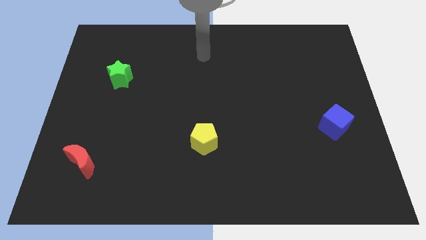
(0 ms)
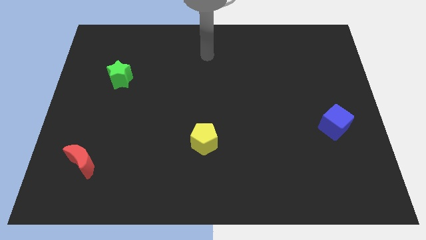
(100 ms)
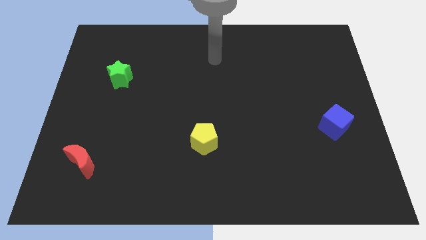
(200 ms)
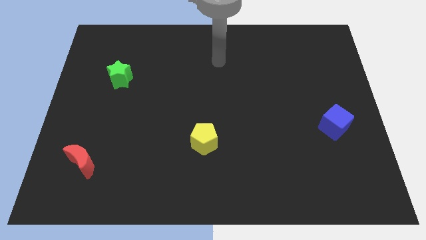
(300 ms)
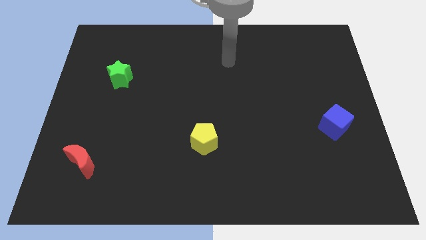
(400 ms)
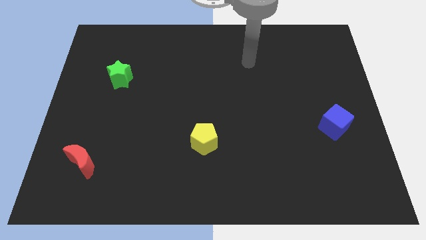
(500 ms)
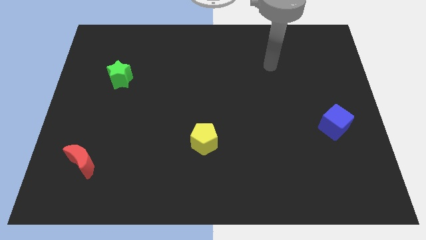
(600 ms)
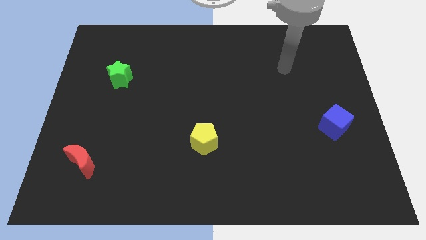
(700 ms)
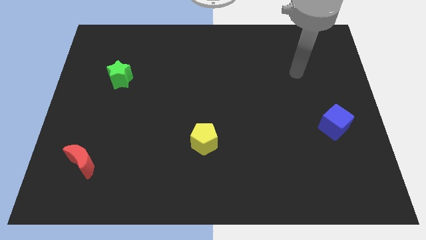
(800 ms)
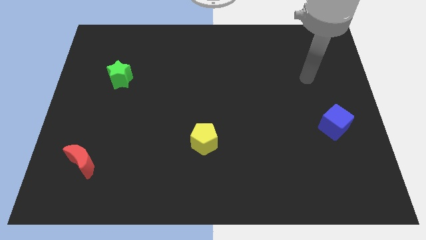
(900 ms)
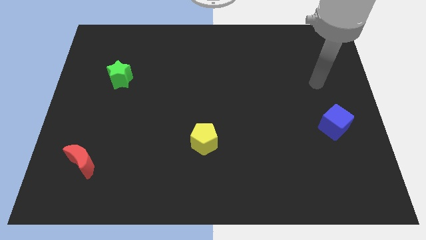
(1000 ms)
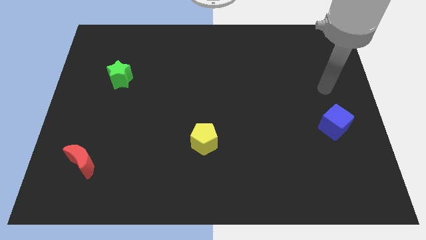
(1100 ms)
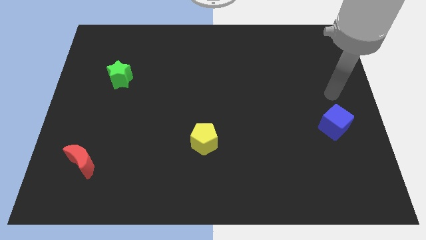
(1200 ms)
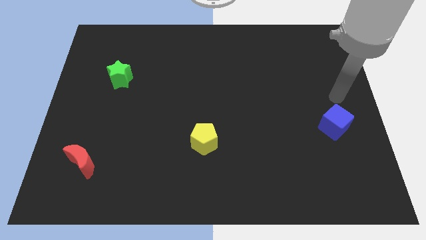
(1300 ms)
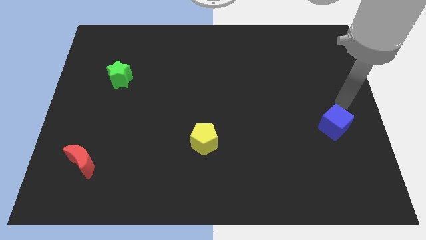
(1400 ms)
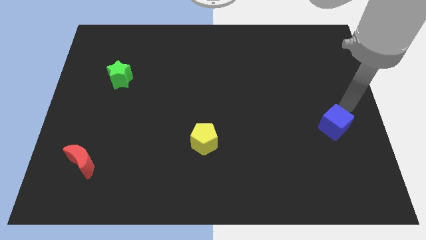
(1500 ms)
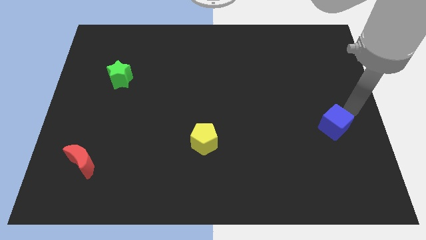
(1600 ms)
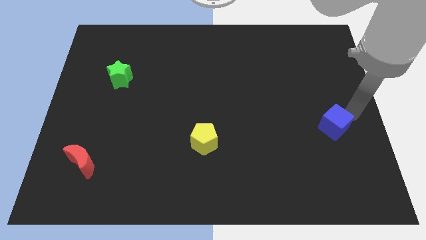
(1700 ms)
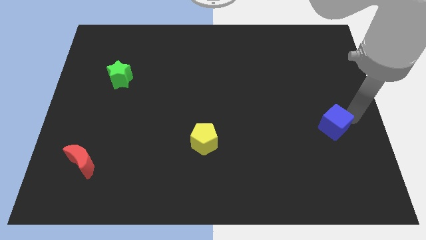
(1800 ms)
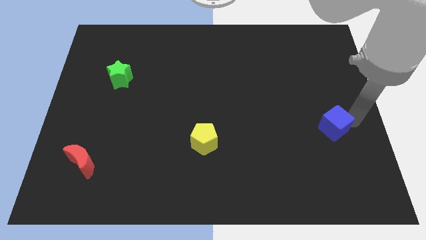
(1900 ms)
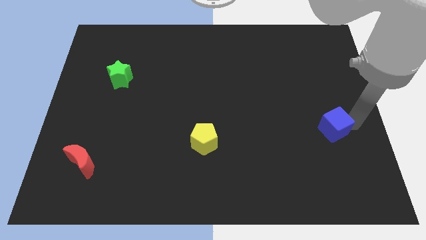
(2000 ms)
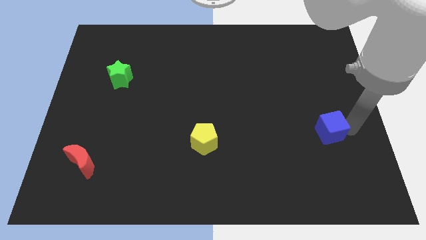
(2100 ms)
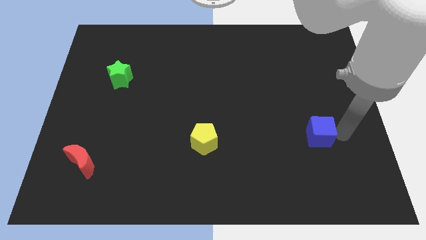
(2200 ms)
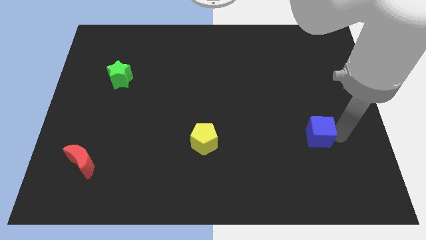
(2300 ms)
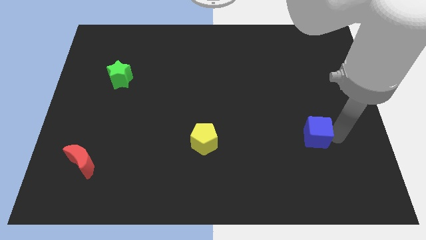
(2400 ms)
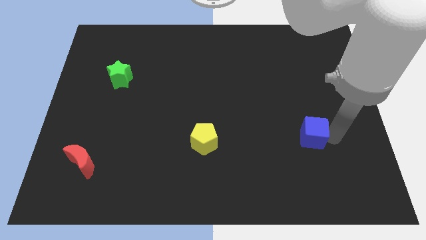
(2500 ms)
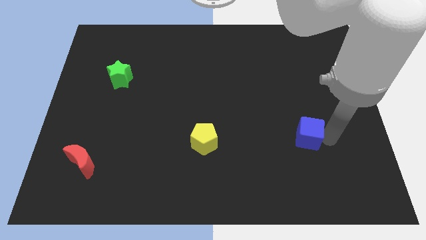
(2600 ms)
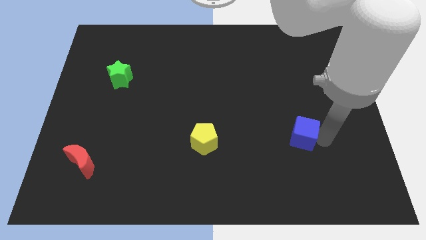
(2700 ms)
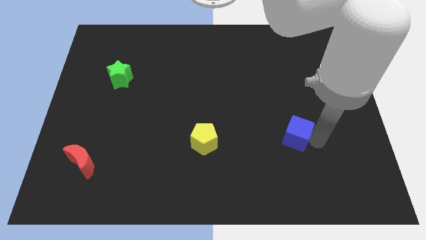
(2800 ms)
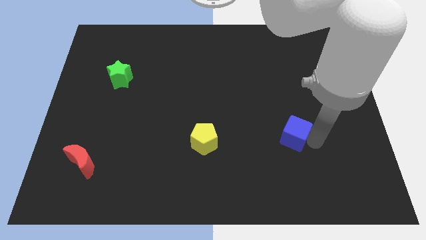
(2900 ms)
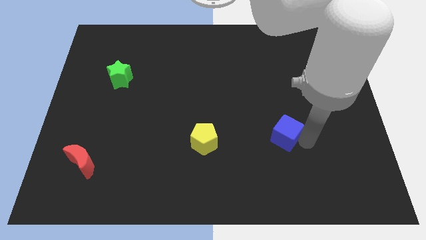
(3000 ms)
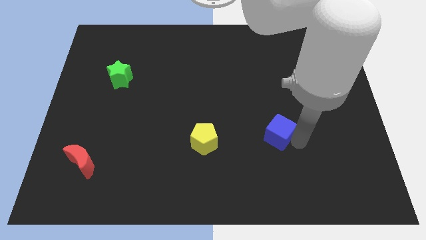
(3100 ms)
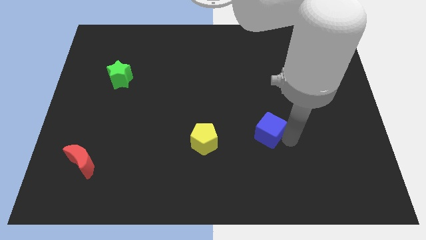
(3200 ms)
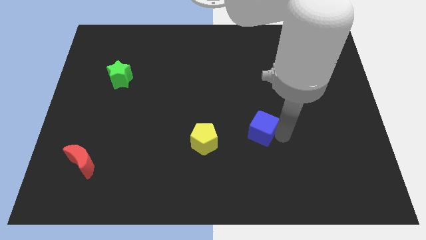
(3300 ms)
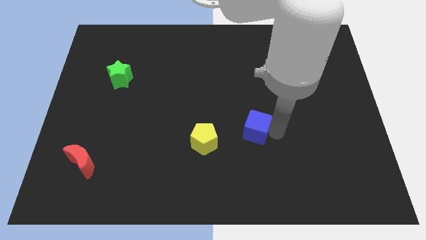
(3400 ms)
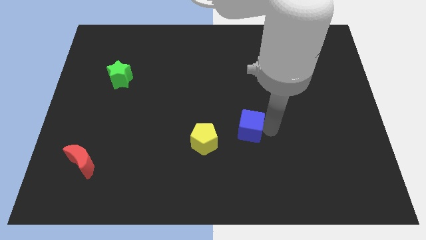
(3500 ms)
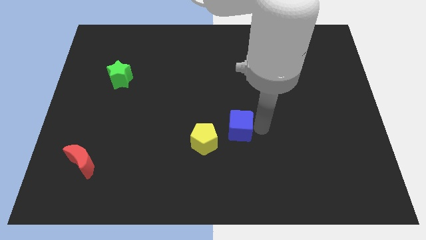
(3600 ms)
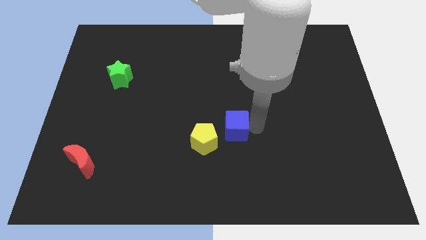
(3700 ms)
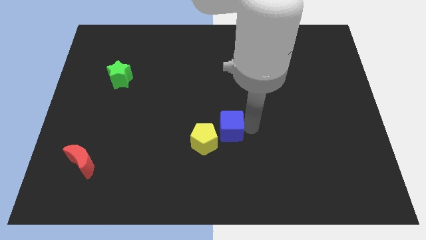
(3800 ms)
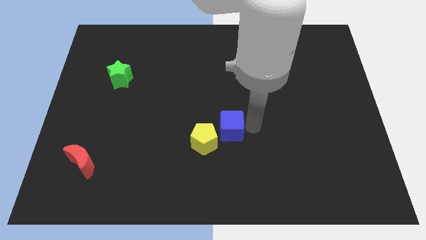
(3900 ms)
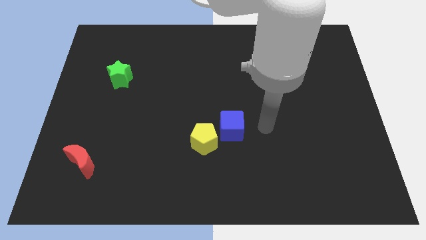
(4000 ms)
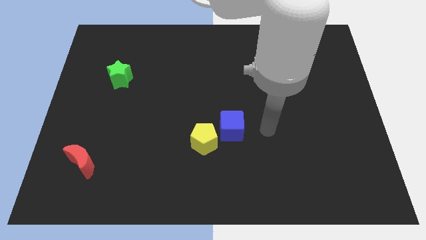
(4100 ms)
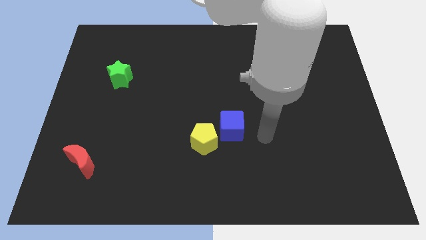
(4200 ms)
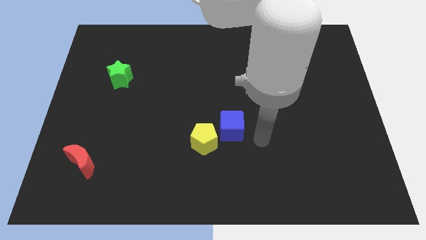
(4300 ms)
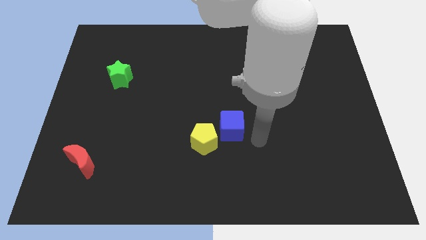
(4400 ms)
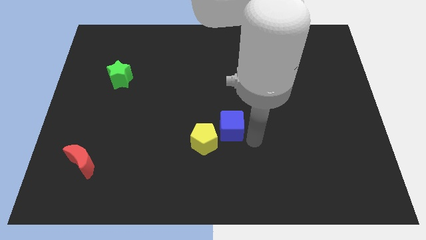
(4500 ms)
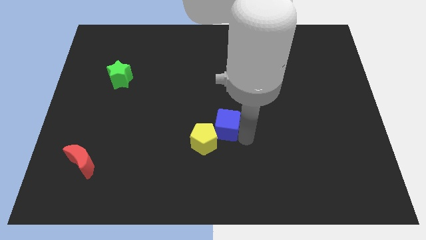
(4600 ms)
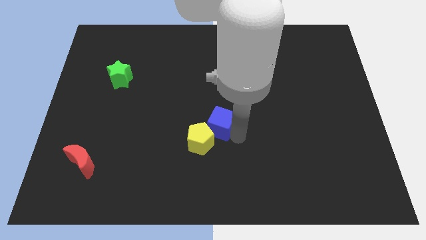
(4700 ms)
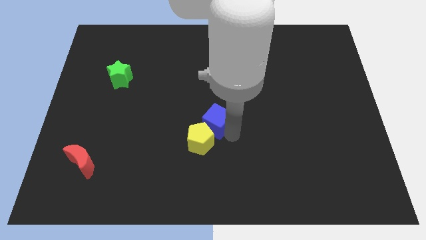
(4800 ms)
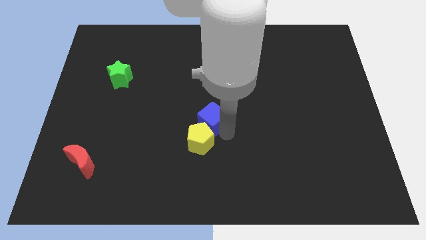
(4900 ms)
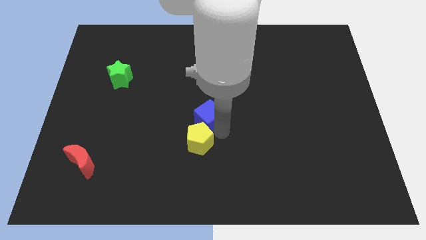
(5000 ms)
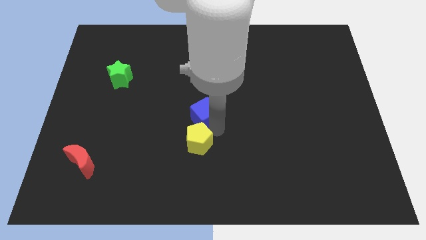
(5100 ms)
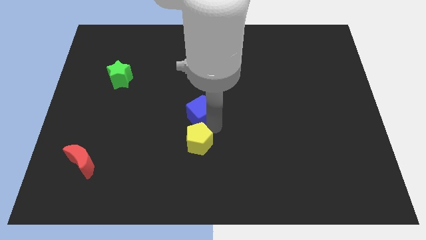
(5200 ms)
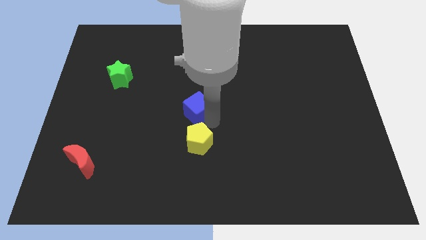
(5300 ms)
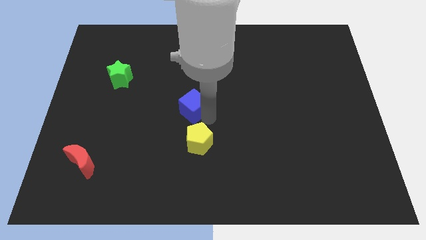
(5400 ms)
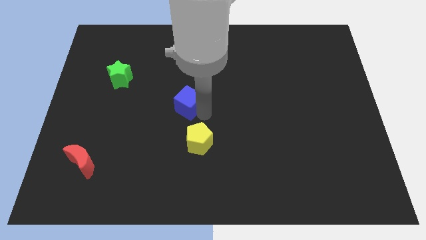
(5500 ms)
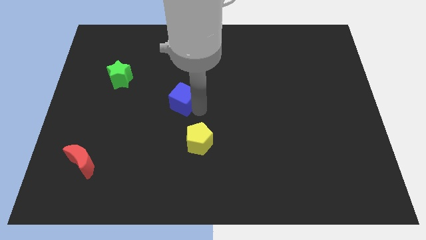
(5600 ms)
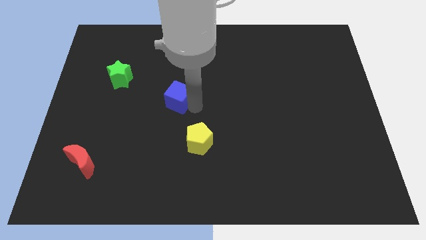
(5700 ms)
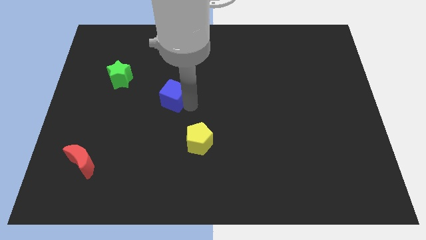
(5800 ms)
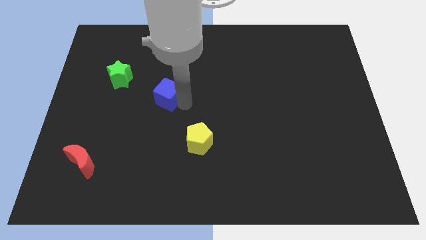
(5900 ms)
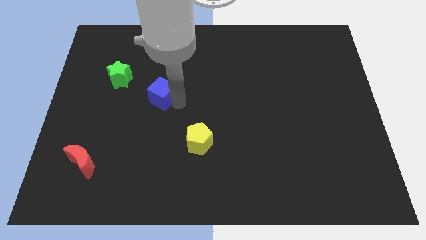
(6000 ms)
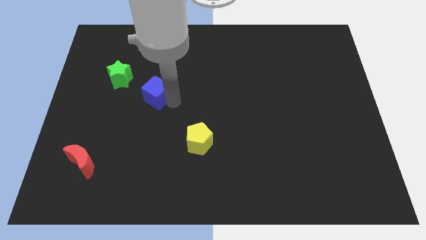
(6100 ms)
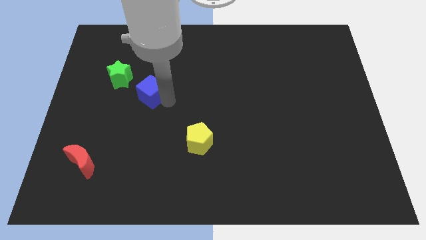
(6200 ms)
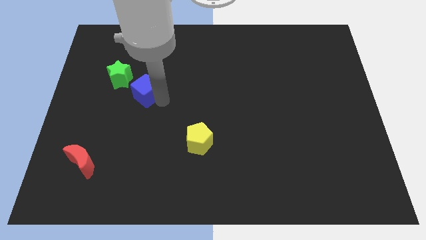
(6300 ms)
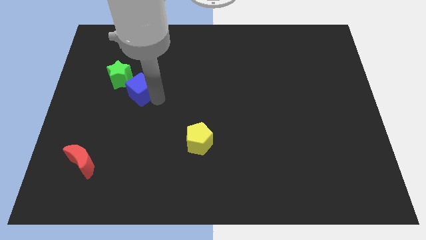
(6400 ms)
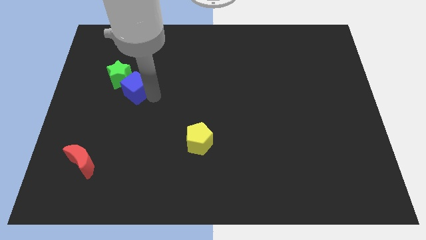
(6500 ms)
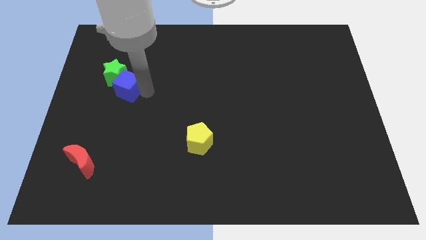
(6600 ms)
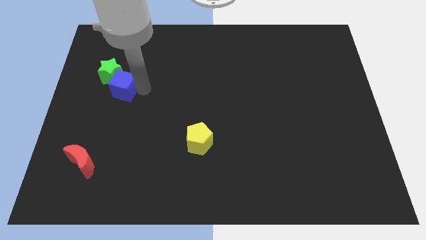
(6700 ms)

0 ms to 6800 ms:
slide the cube next to the green star

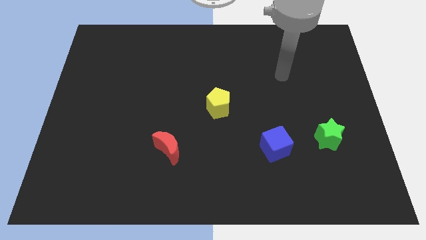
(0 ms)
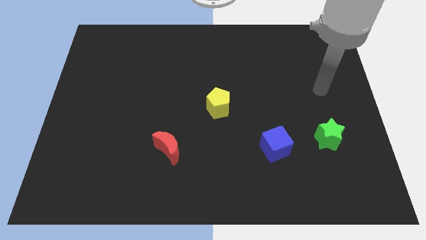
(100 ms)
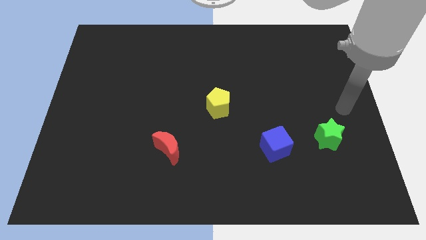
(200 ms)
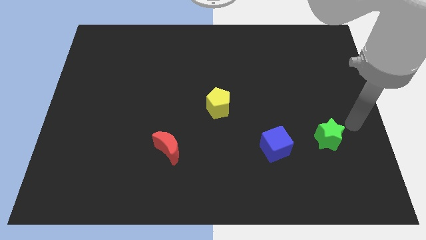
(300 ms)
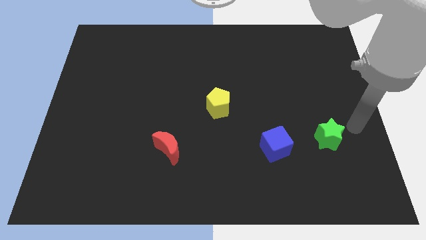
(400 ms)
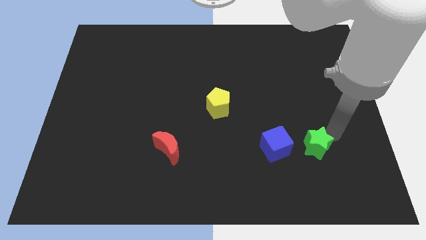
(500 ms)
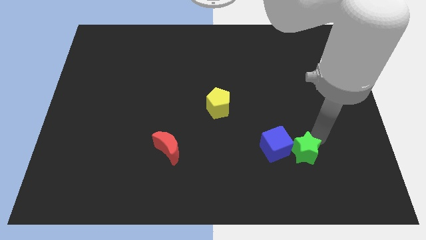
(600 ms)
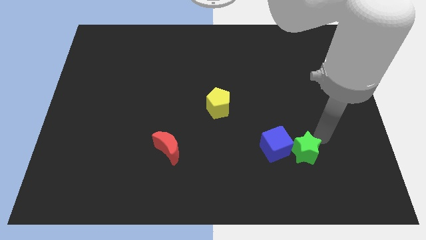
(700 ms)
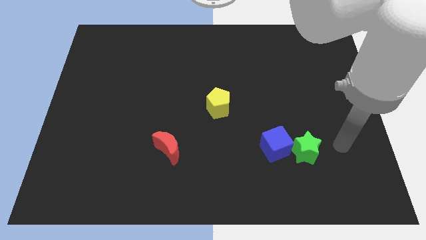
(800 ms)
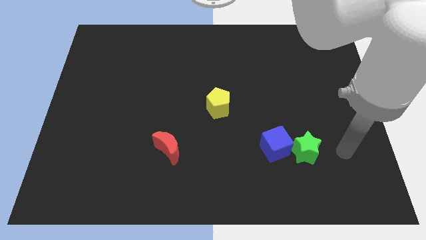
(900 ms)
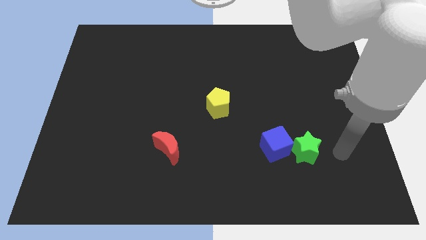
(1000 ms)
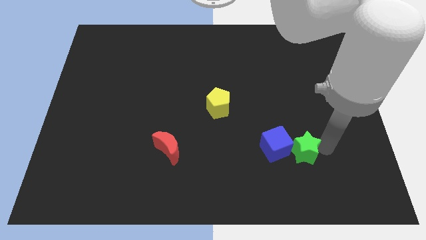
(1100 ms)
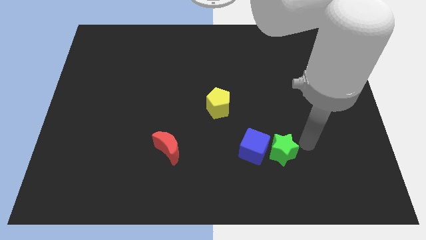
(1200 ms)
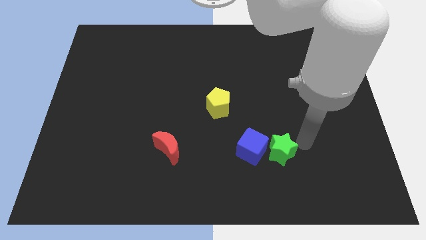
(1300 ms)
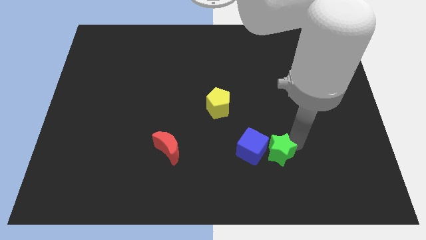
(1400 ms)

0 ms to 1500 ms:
push the green block to the blue cube
